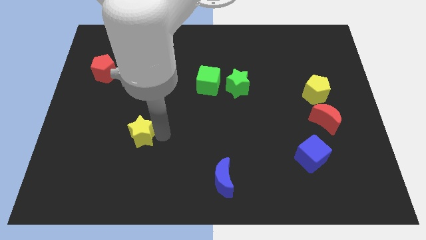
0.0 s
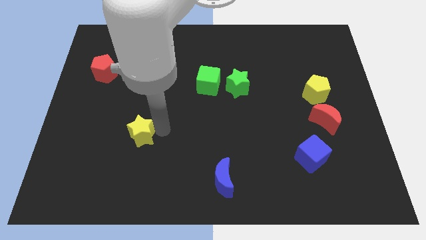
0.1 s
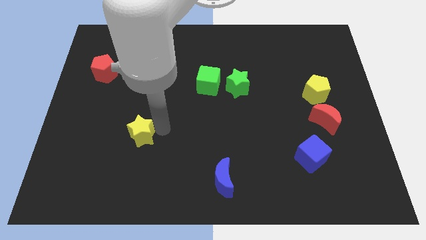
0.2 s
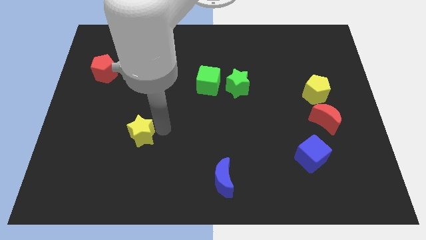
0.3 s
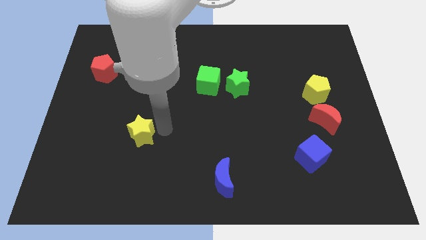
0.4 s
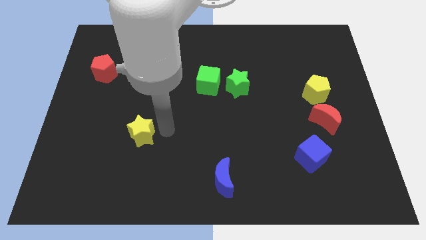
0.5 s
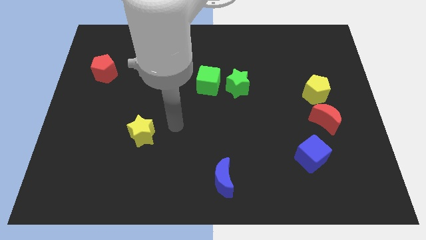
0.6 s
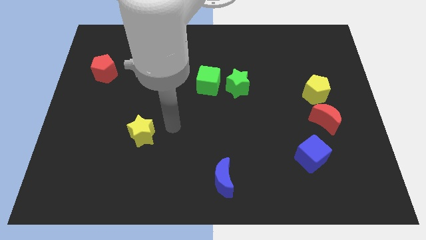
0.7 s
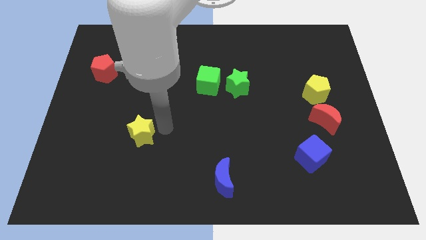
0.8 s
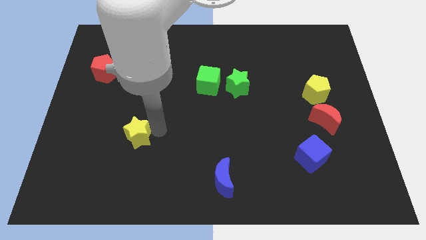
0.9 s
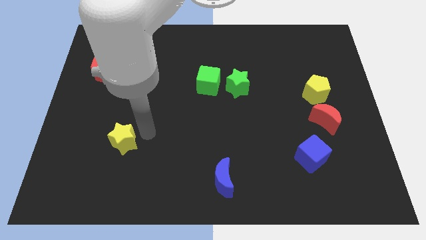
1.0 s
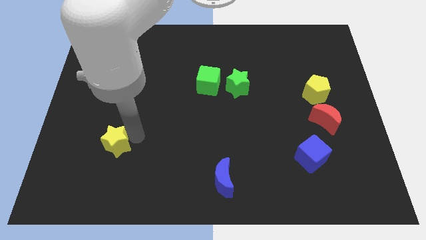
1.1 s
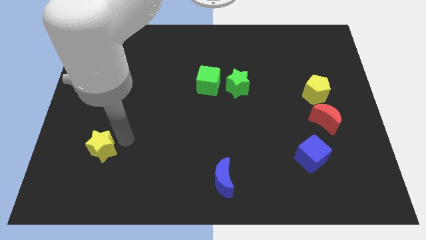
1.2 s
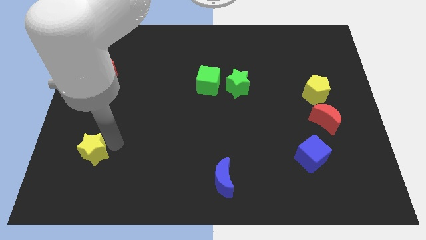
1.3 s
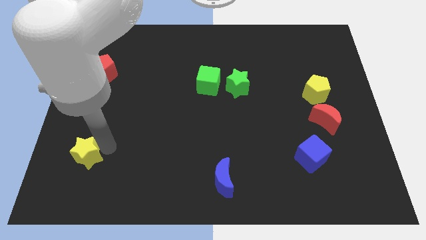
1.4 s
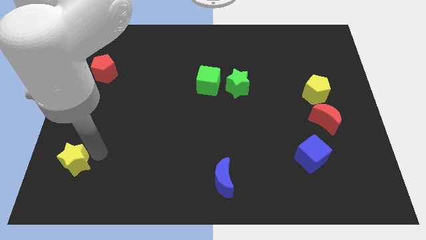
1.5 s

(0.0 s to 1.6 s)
put the yellow star vertically below the red pentagon

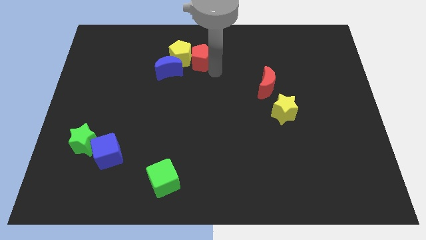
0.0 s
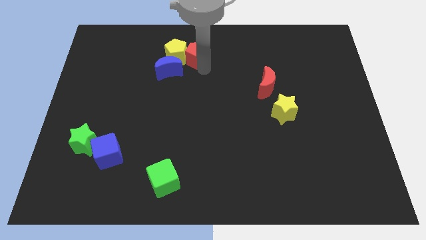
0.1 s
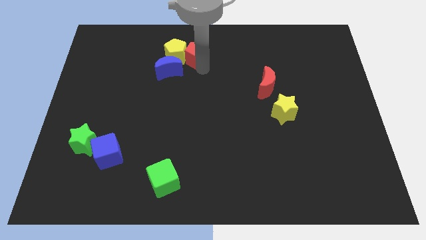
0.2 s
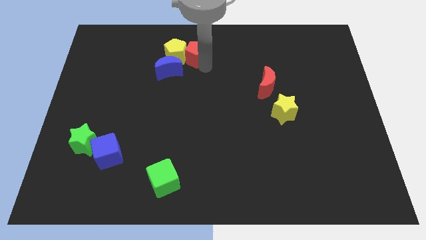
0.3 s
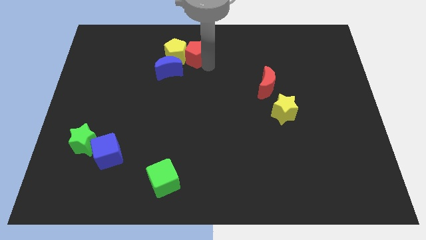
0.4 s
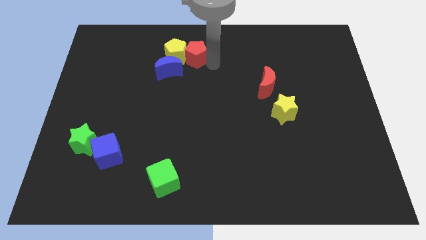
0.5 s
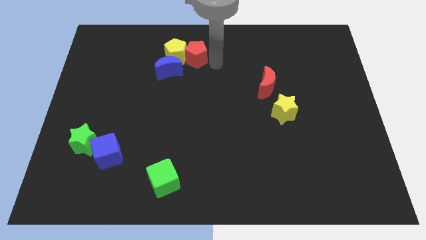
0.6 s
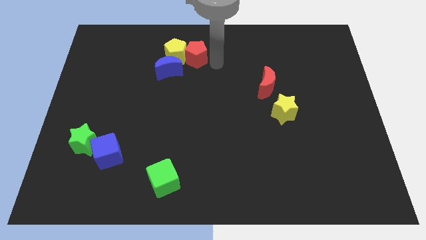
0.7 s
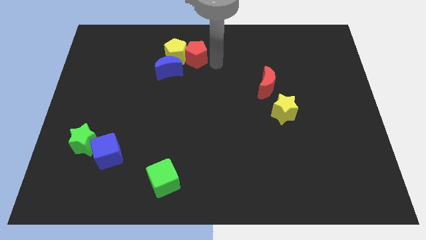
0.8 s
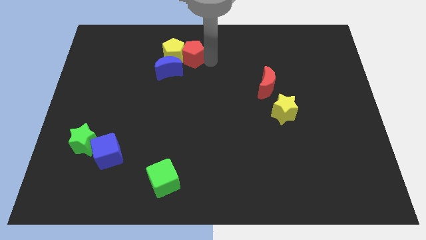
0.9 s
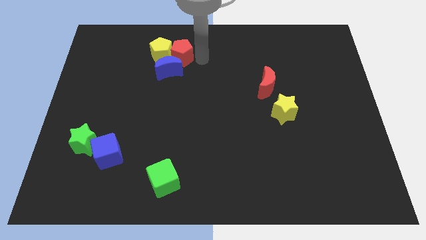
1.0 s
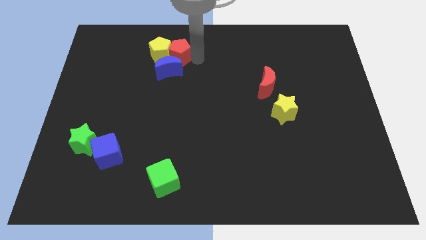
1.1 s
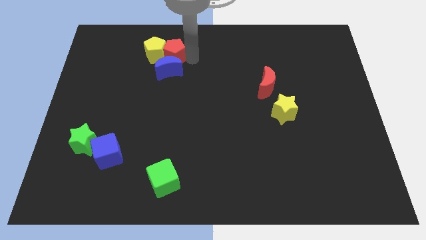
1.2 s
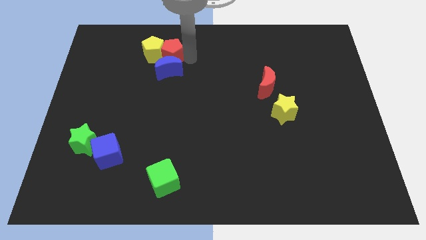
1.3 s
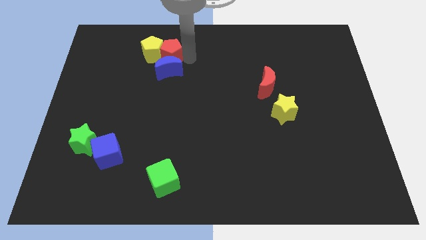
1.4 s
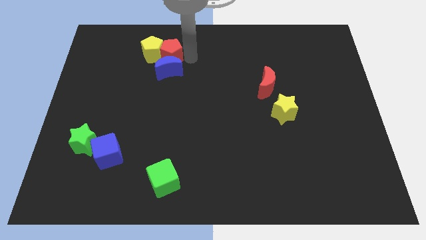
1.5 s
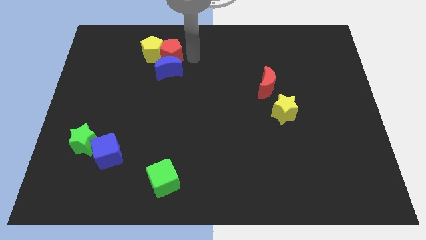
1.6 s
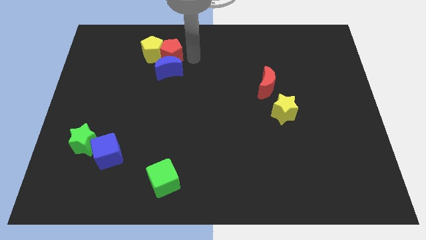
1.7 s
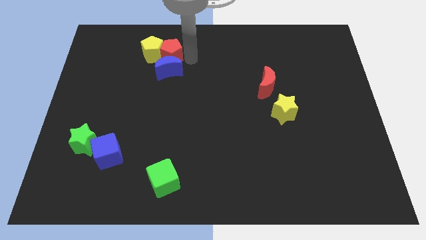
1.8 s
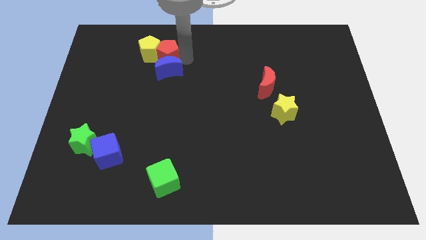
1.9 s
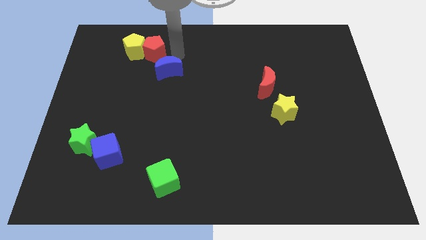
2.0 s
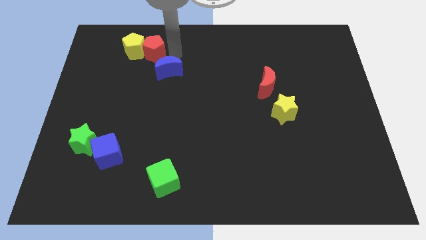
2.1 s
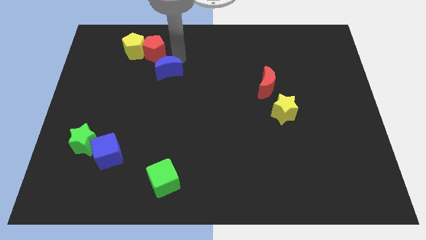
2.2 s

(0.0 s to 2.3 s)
push the red pentagon along with the yellow pentagon towards the left side of the board

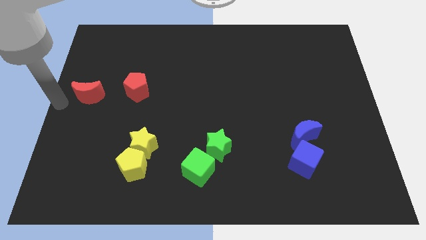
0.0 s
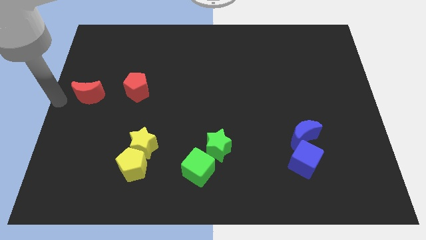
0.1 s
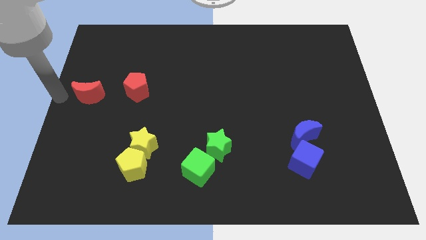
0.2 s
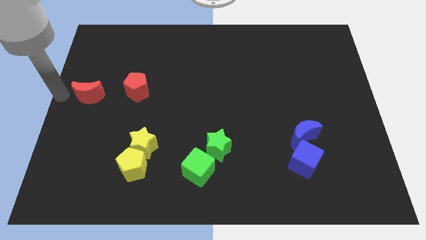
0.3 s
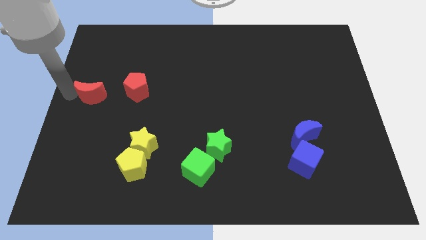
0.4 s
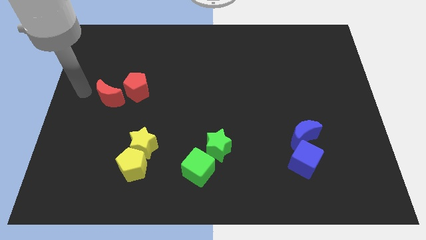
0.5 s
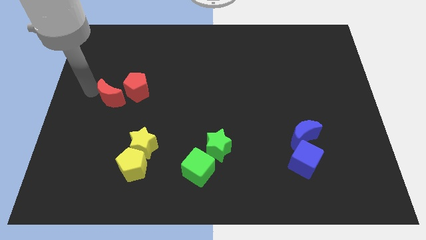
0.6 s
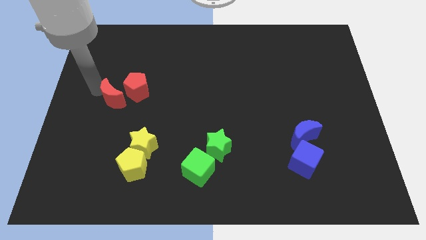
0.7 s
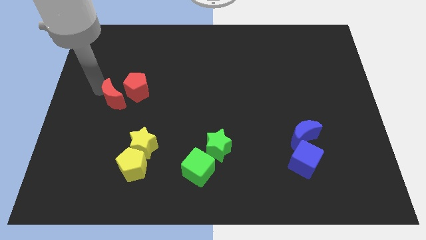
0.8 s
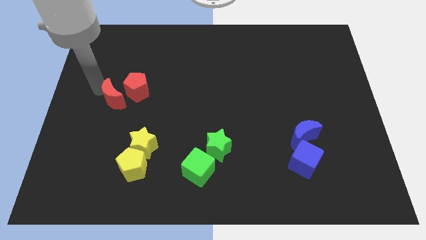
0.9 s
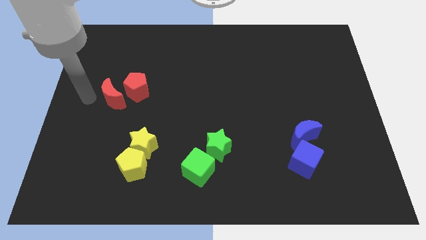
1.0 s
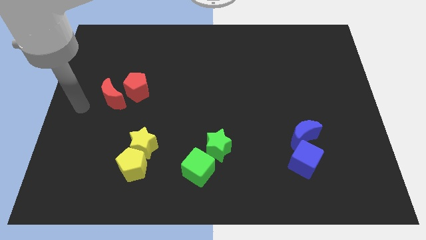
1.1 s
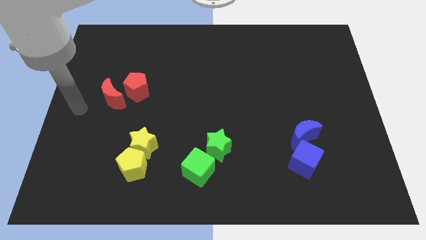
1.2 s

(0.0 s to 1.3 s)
move red moon close to the red pentagon

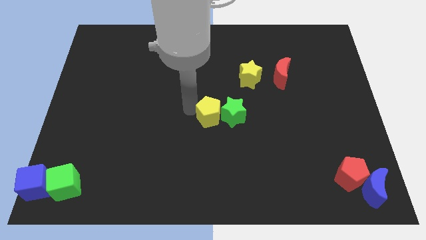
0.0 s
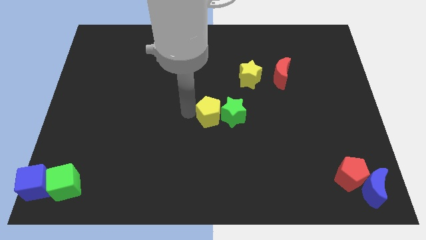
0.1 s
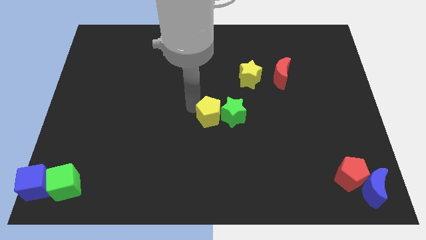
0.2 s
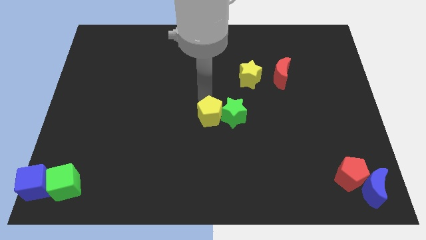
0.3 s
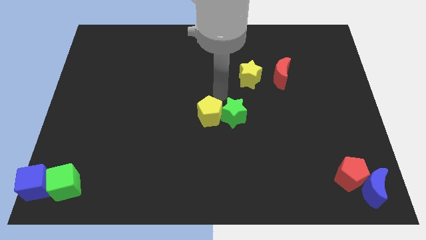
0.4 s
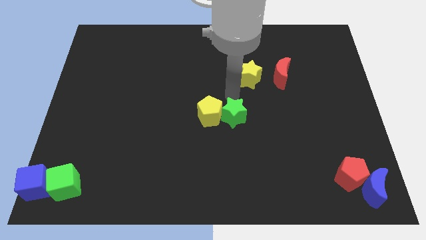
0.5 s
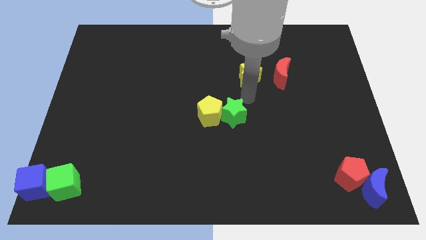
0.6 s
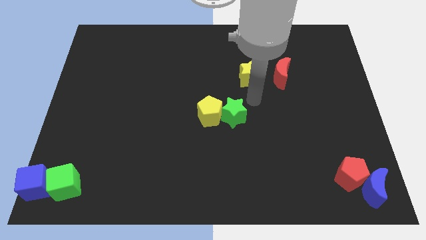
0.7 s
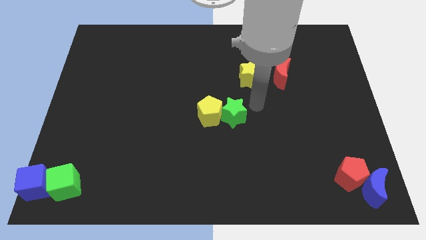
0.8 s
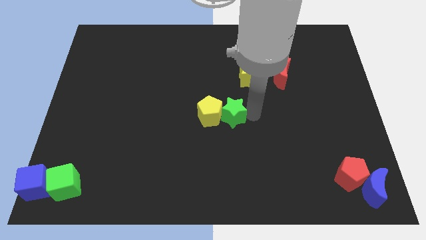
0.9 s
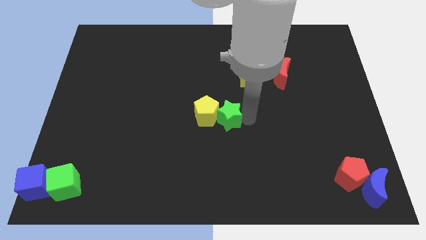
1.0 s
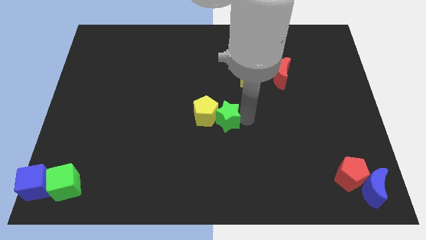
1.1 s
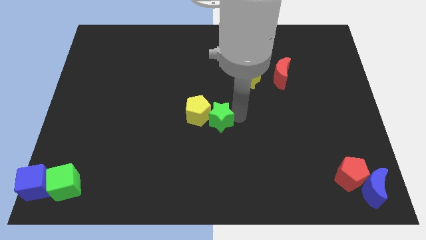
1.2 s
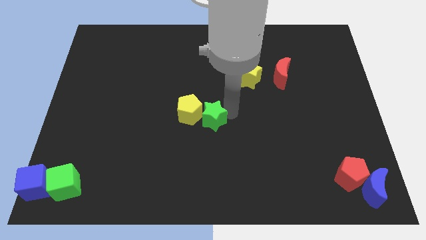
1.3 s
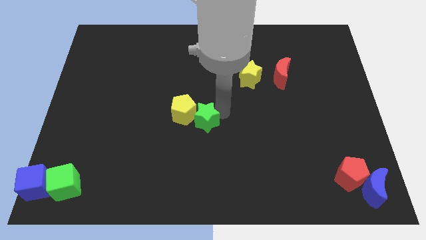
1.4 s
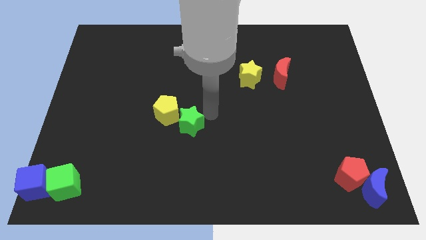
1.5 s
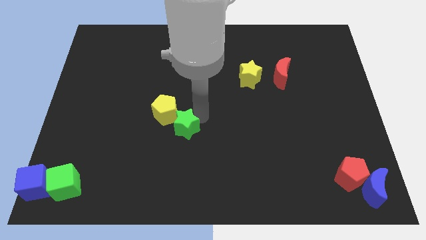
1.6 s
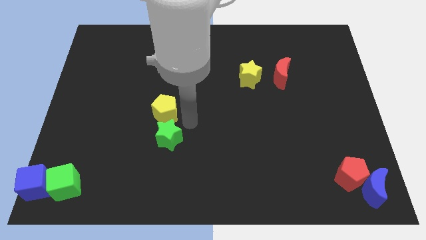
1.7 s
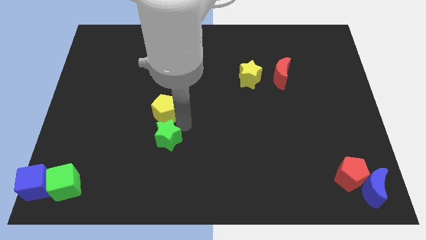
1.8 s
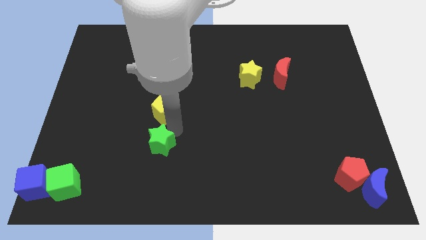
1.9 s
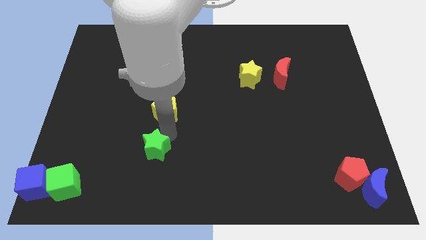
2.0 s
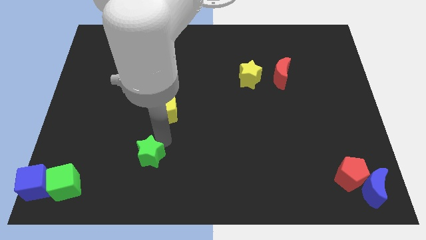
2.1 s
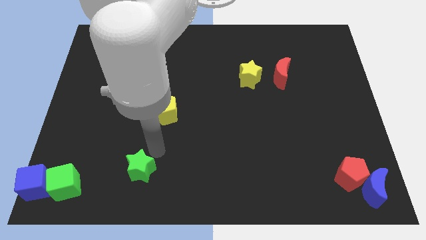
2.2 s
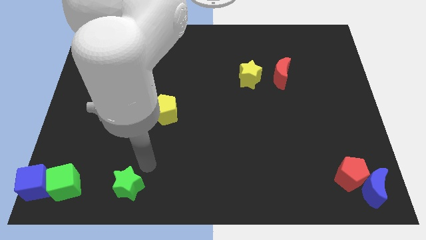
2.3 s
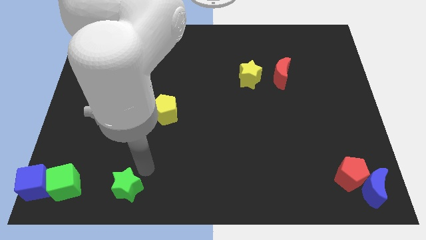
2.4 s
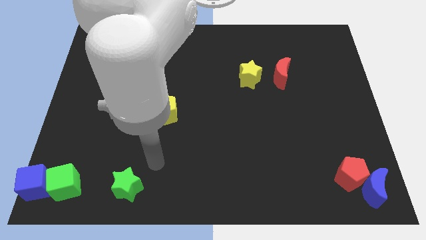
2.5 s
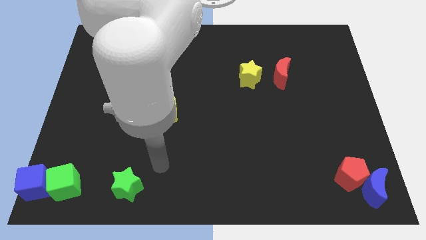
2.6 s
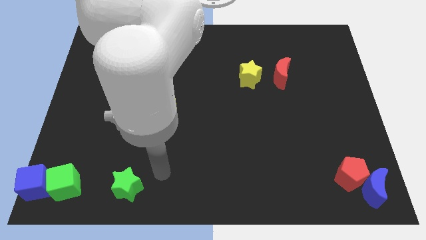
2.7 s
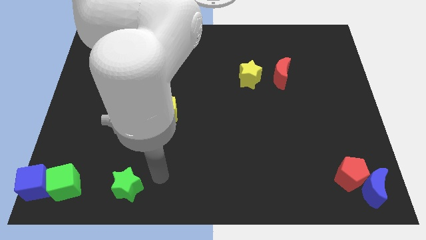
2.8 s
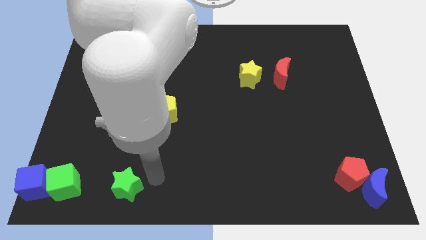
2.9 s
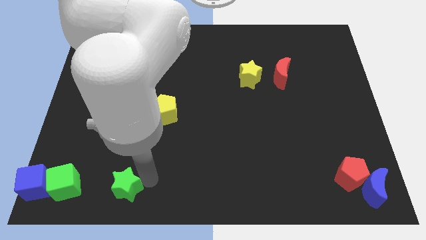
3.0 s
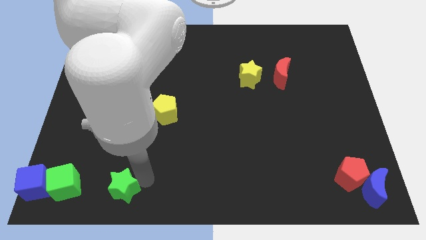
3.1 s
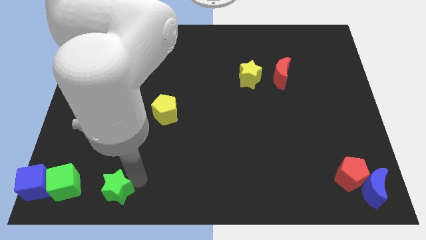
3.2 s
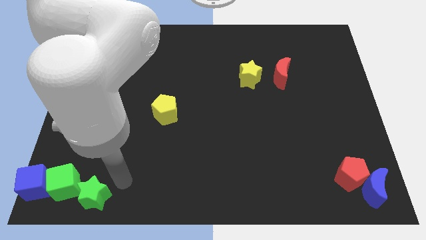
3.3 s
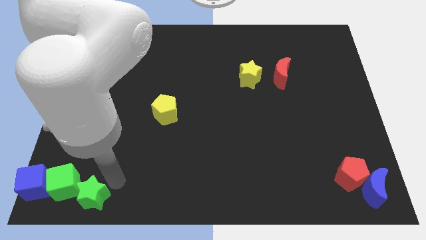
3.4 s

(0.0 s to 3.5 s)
place green star beside green cube

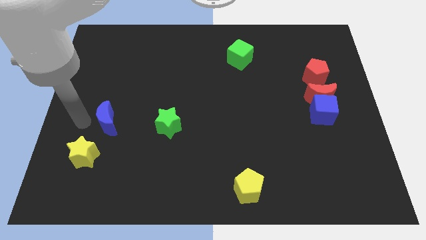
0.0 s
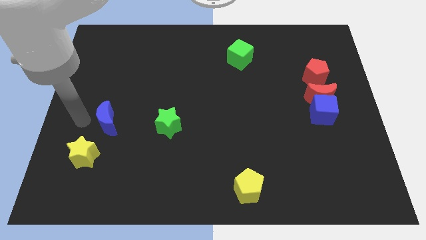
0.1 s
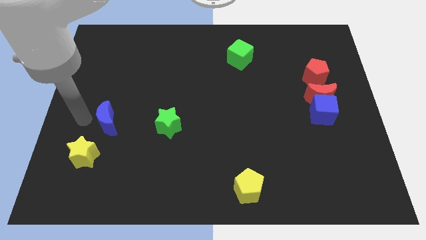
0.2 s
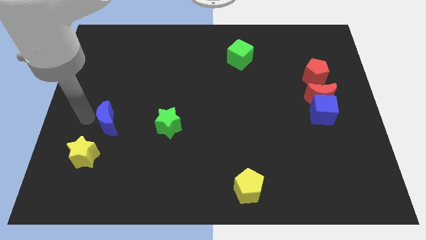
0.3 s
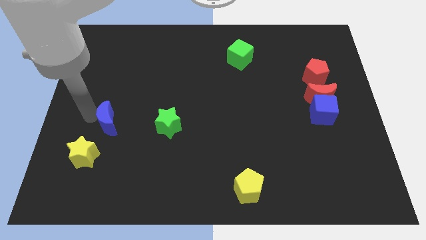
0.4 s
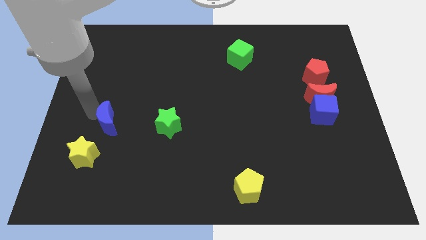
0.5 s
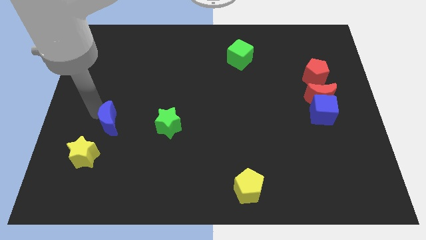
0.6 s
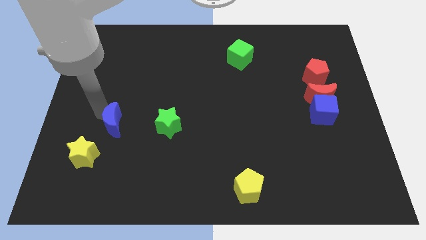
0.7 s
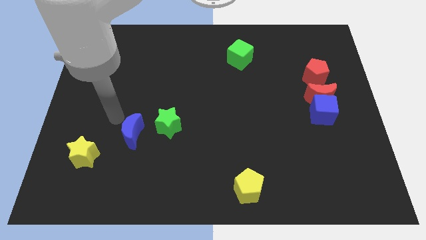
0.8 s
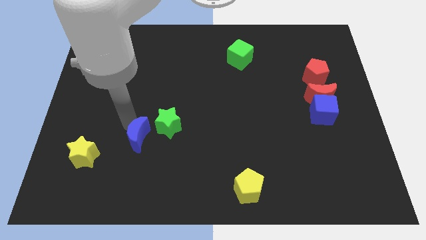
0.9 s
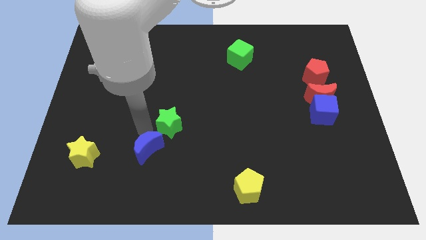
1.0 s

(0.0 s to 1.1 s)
move the blue moon at the bottom left of the green star
